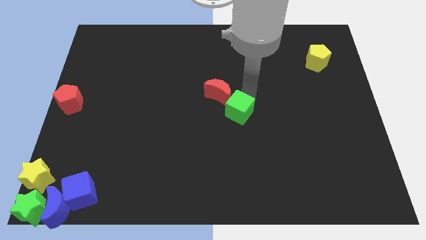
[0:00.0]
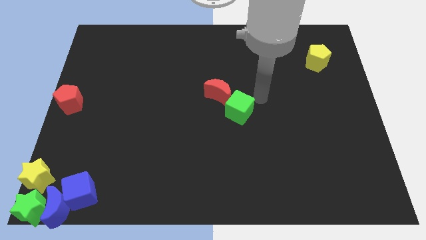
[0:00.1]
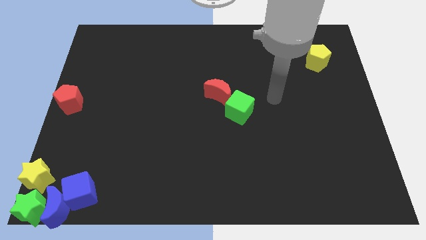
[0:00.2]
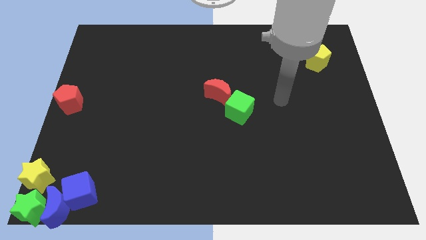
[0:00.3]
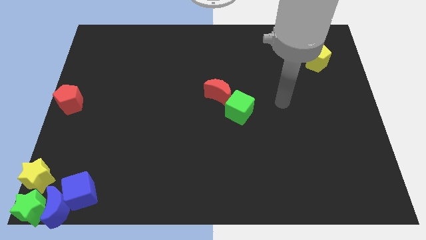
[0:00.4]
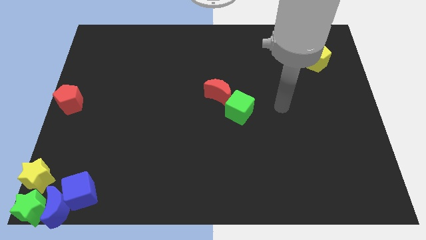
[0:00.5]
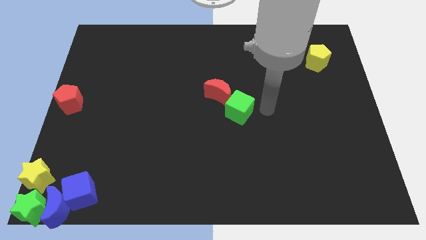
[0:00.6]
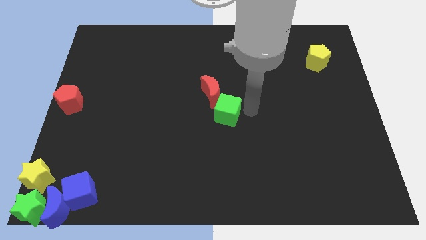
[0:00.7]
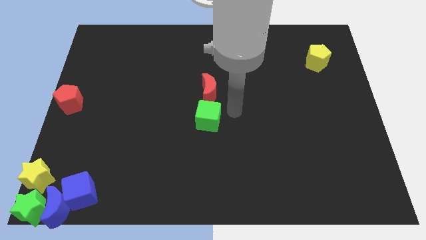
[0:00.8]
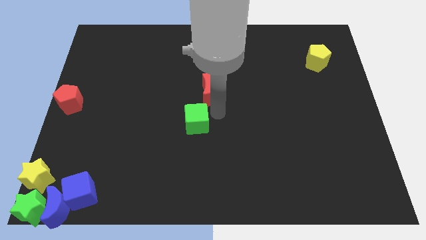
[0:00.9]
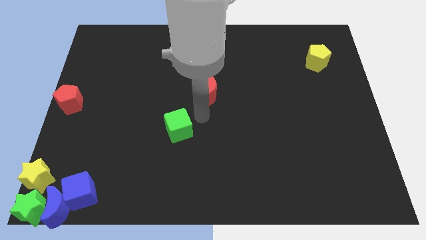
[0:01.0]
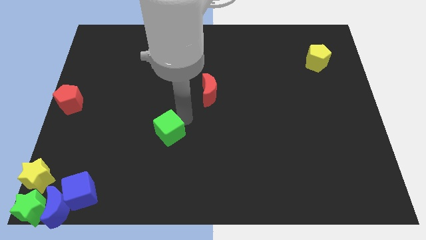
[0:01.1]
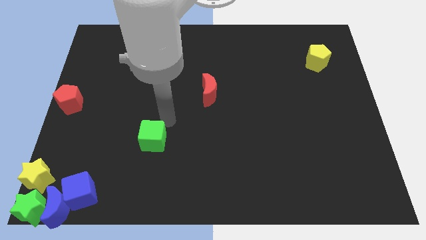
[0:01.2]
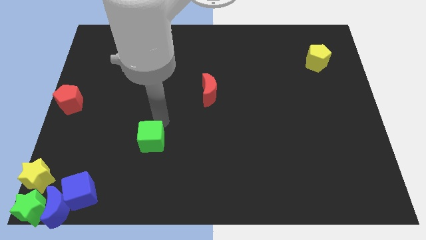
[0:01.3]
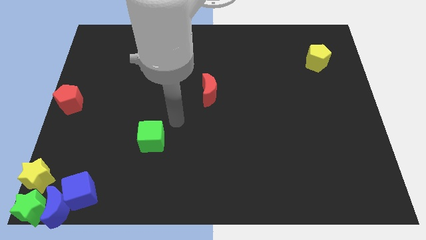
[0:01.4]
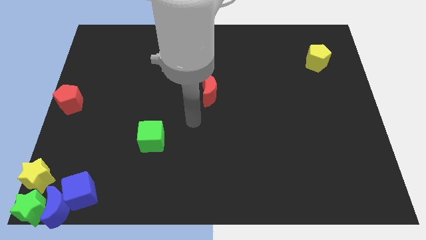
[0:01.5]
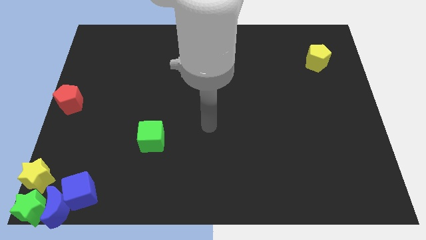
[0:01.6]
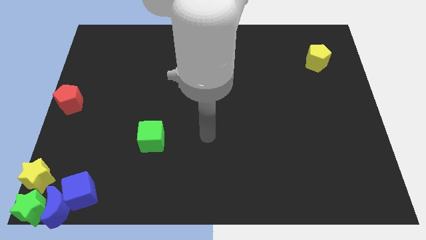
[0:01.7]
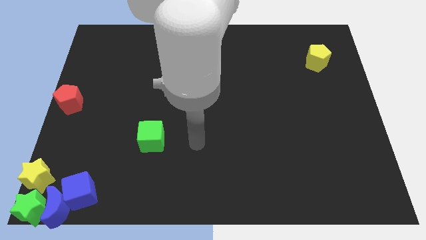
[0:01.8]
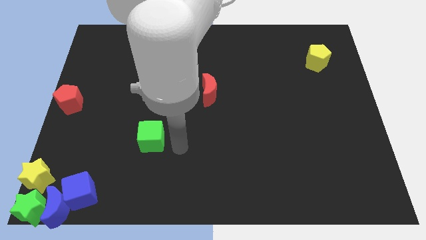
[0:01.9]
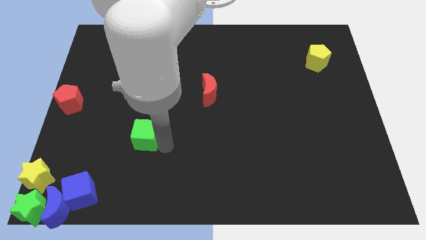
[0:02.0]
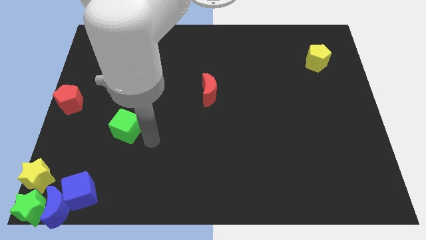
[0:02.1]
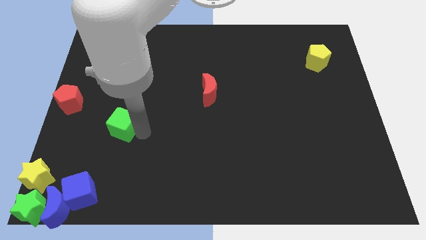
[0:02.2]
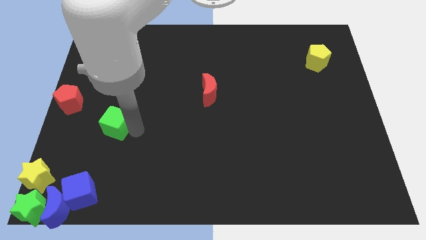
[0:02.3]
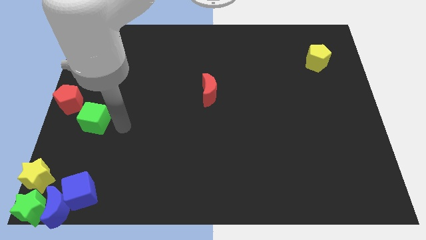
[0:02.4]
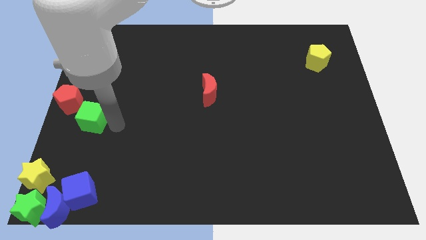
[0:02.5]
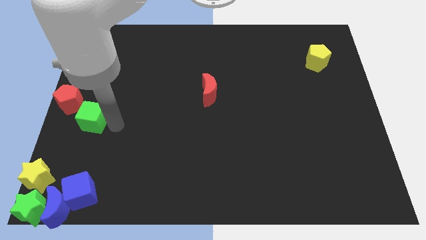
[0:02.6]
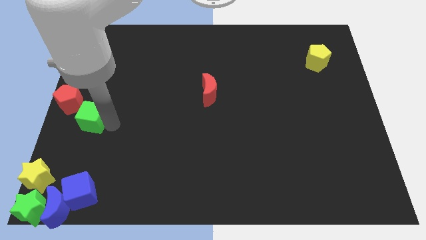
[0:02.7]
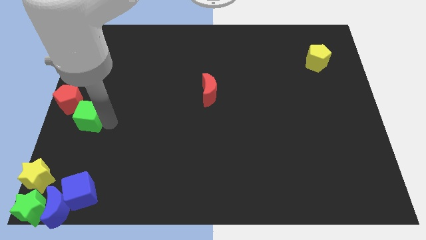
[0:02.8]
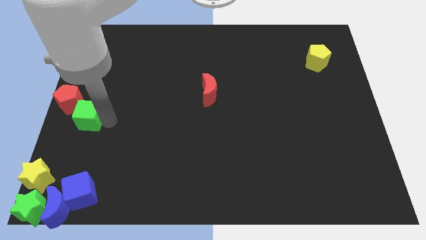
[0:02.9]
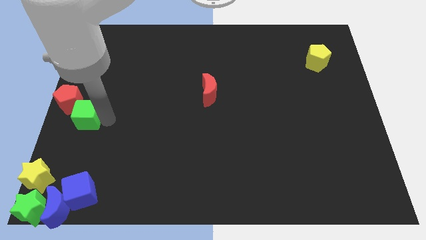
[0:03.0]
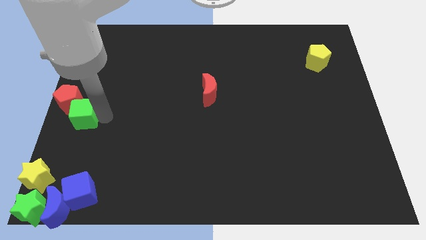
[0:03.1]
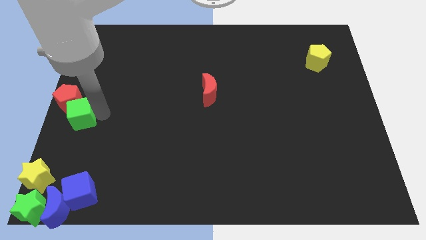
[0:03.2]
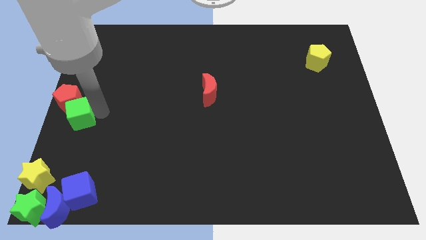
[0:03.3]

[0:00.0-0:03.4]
push the green cube into the bottom right side of the red pentagon

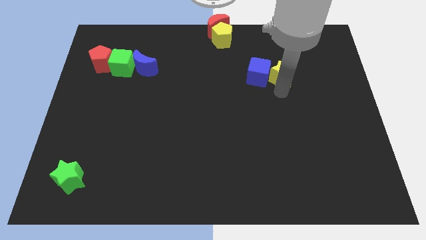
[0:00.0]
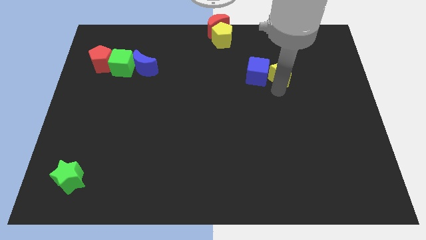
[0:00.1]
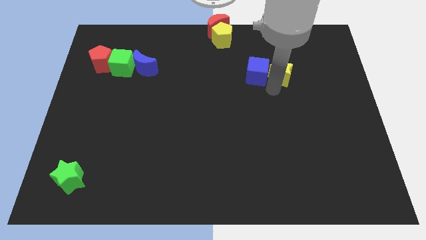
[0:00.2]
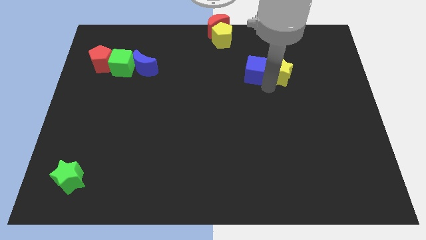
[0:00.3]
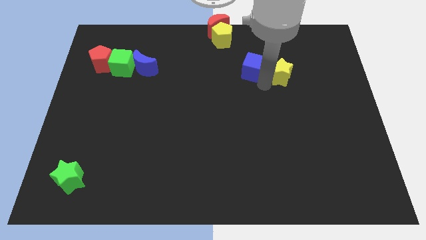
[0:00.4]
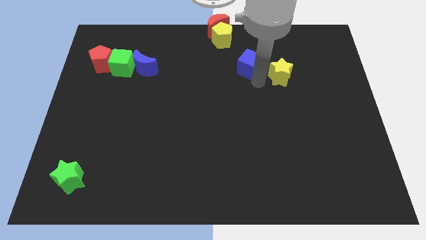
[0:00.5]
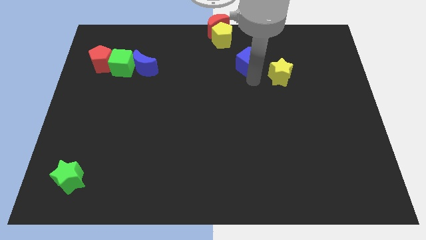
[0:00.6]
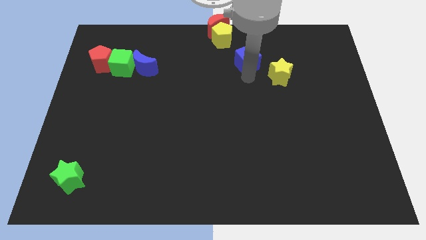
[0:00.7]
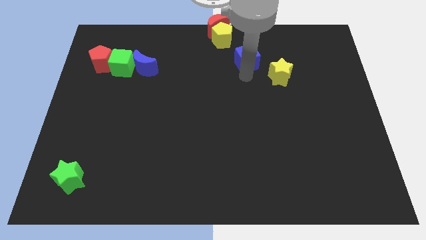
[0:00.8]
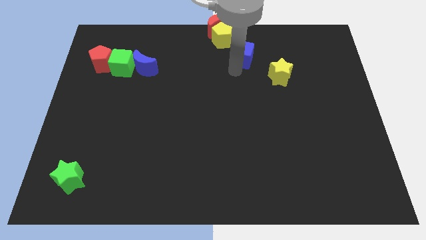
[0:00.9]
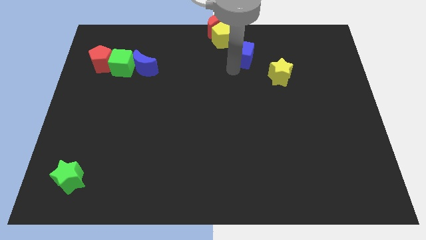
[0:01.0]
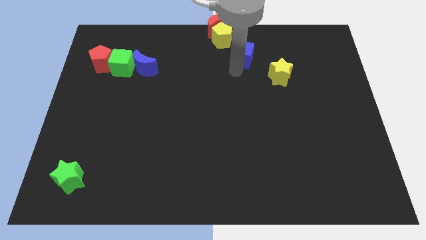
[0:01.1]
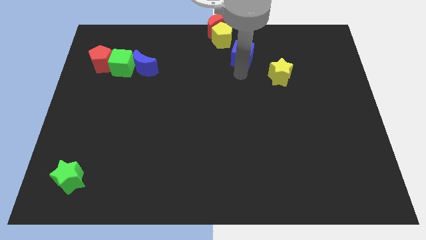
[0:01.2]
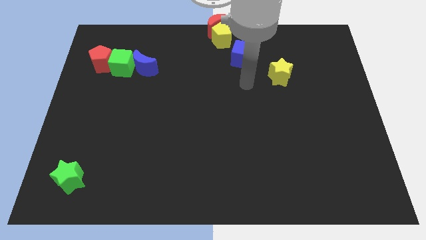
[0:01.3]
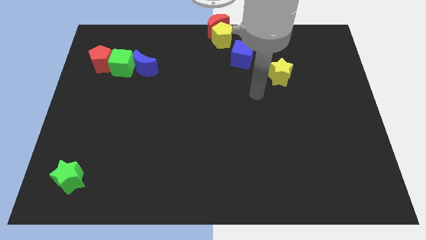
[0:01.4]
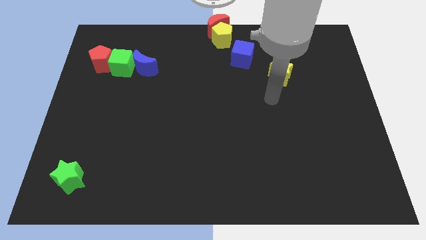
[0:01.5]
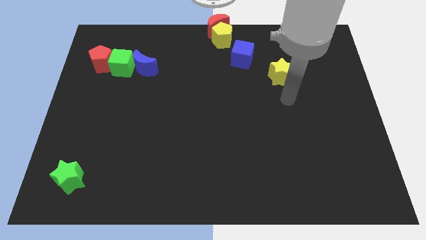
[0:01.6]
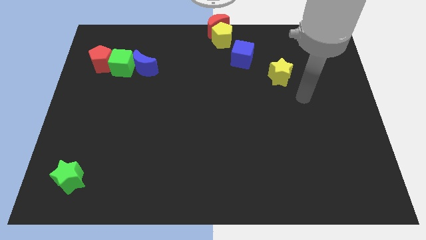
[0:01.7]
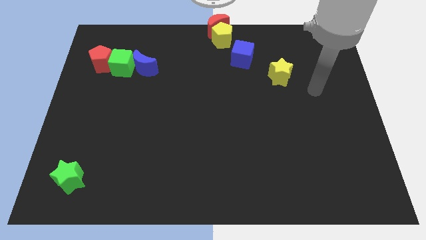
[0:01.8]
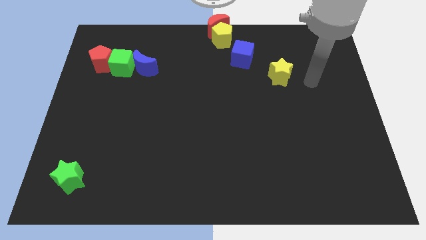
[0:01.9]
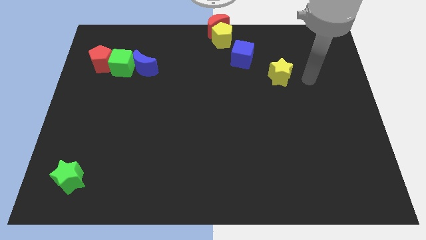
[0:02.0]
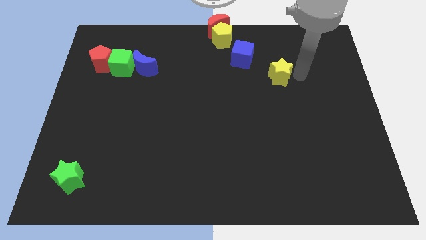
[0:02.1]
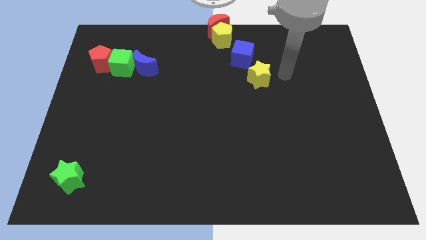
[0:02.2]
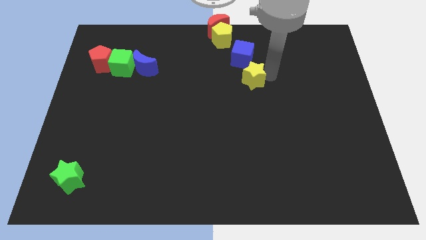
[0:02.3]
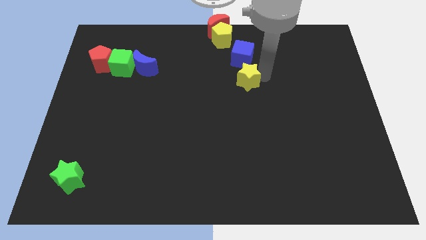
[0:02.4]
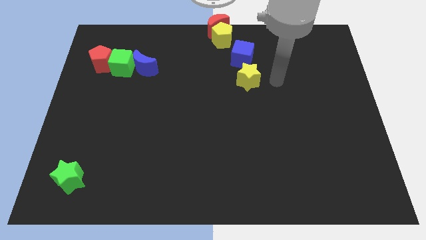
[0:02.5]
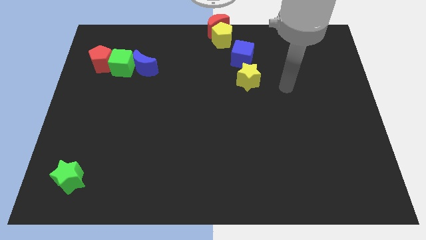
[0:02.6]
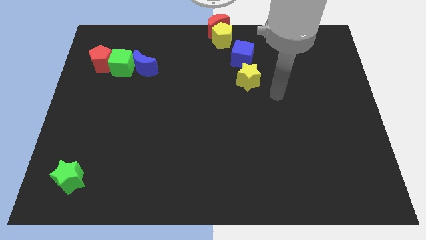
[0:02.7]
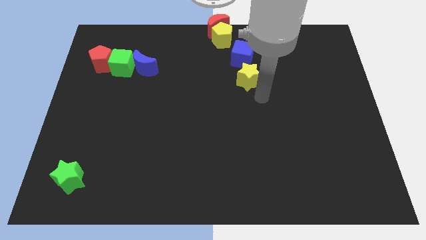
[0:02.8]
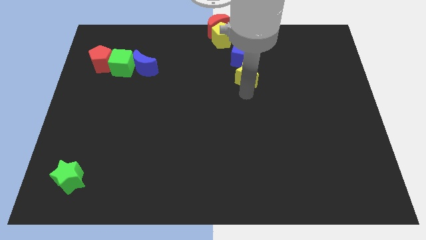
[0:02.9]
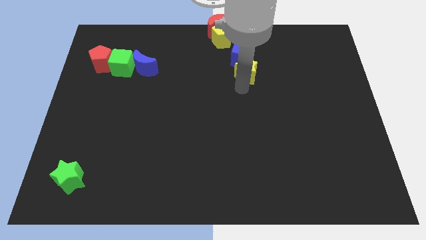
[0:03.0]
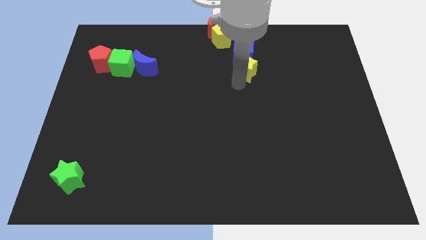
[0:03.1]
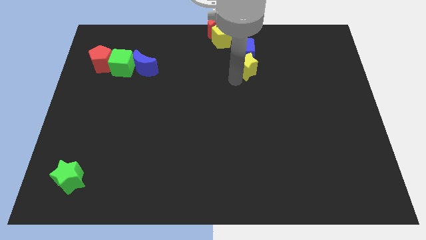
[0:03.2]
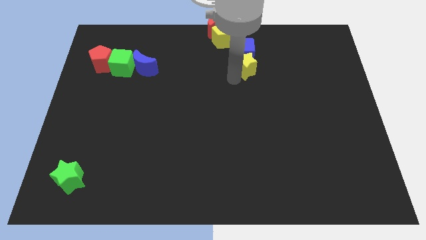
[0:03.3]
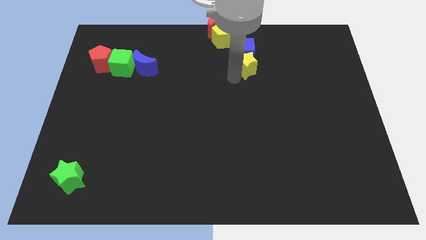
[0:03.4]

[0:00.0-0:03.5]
place the yellow star below the blue cube

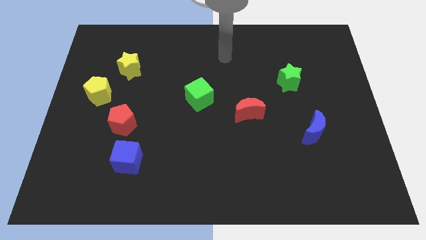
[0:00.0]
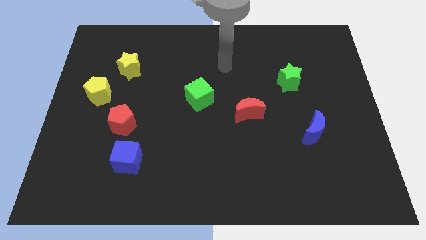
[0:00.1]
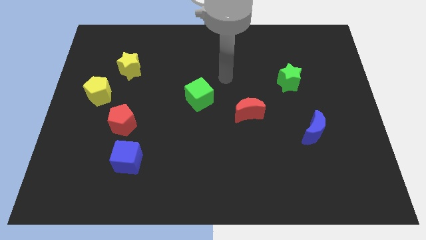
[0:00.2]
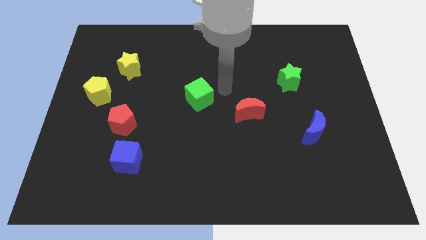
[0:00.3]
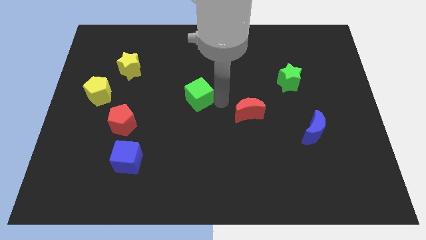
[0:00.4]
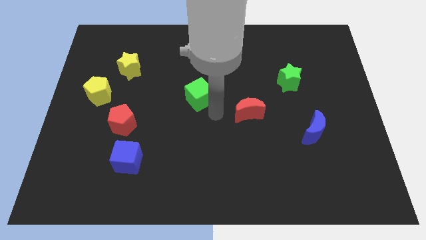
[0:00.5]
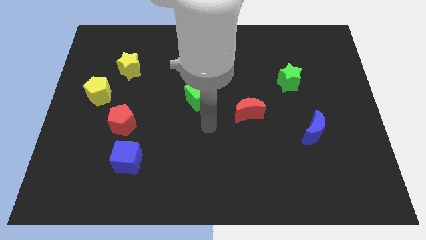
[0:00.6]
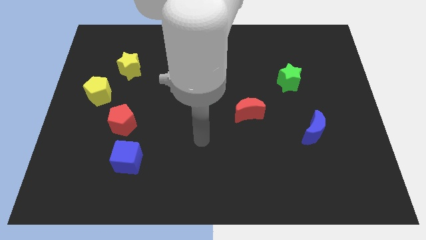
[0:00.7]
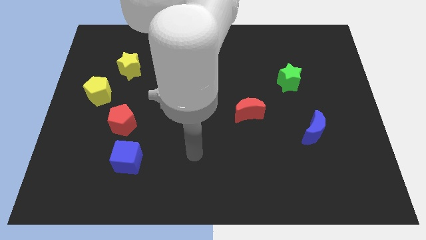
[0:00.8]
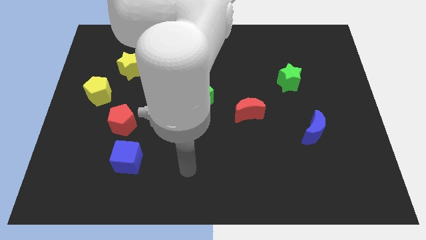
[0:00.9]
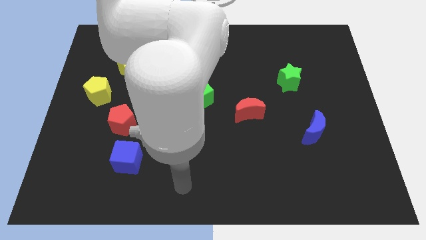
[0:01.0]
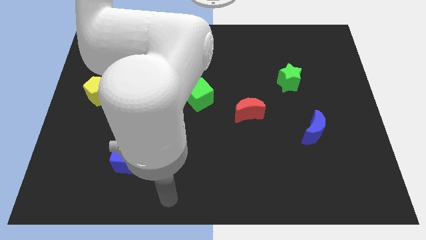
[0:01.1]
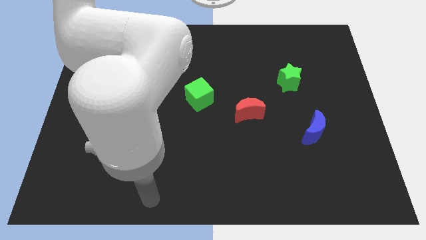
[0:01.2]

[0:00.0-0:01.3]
move your arm towards the bottom side of the board

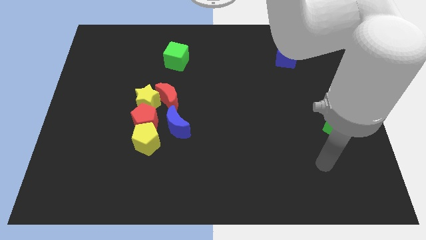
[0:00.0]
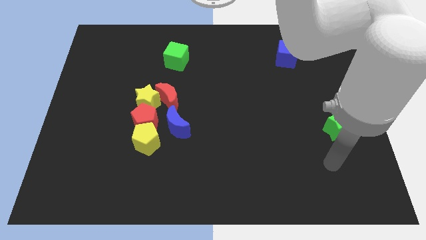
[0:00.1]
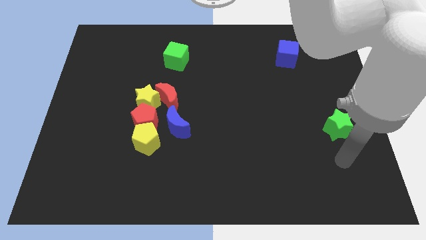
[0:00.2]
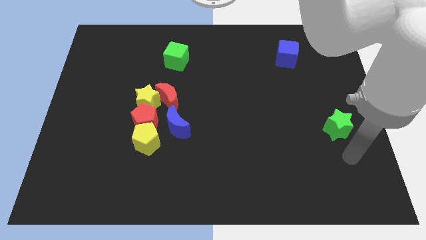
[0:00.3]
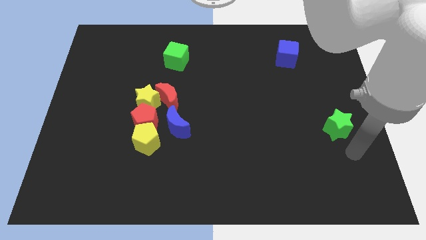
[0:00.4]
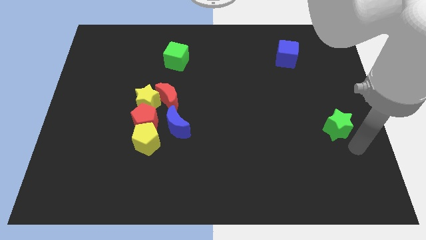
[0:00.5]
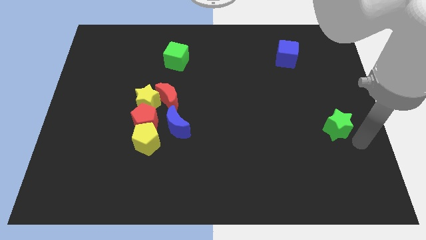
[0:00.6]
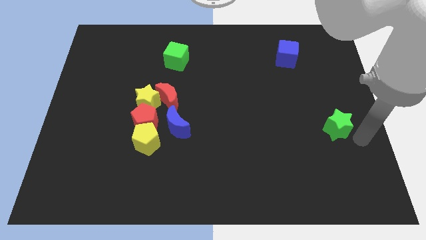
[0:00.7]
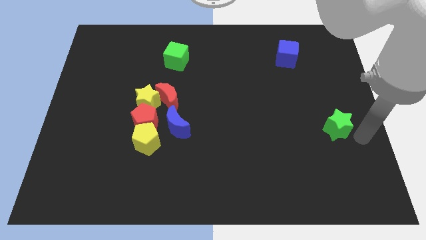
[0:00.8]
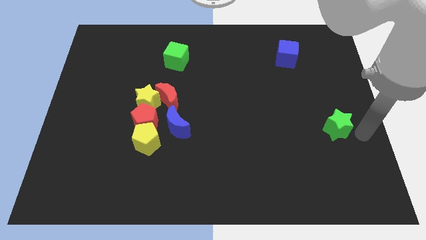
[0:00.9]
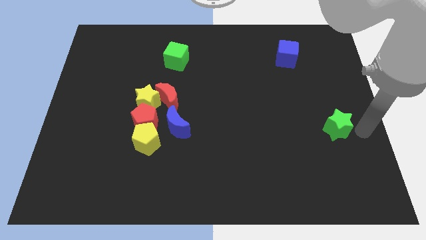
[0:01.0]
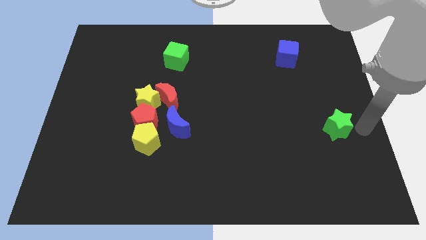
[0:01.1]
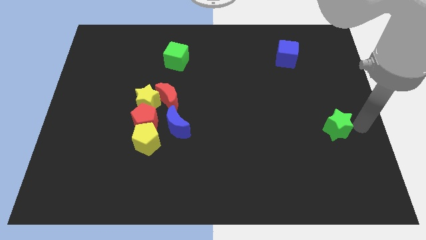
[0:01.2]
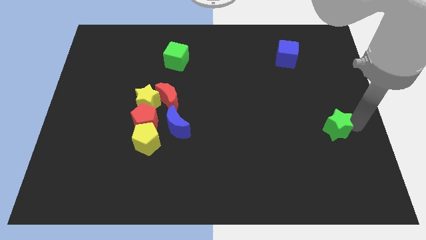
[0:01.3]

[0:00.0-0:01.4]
move the arm towards the right side of the green star
